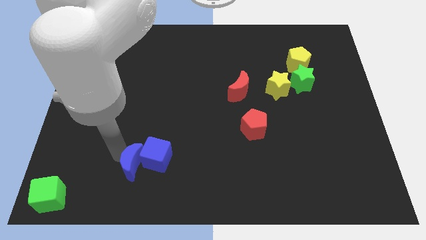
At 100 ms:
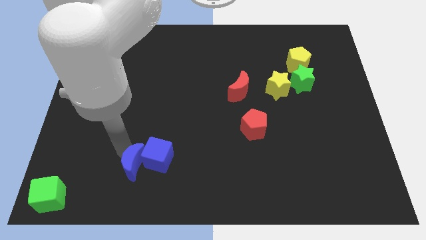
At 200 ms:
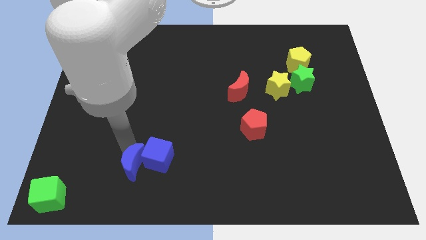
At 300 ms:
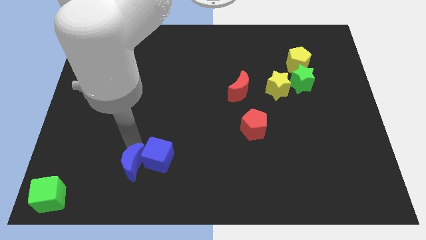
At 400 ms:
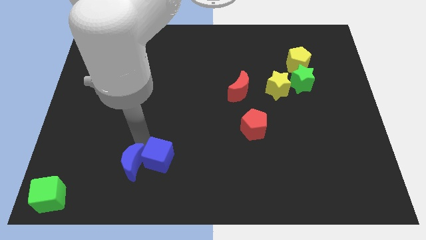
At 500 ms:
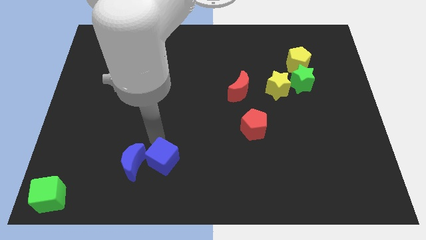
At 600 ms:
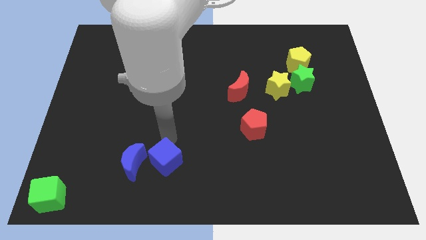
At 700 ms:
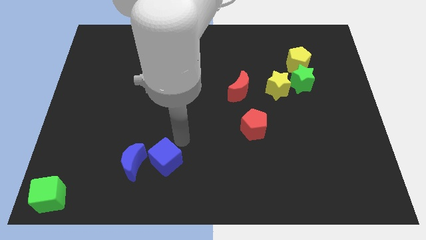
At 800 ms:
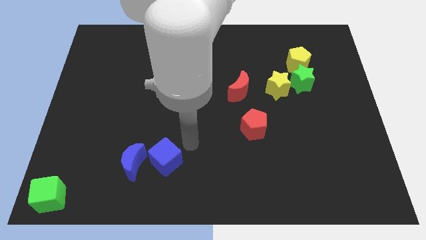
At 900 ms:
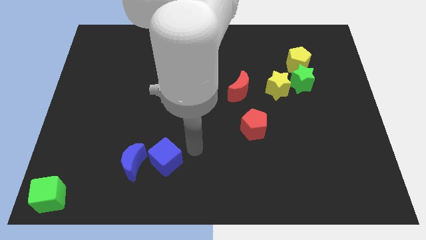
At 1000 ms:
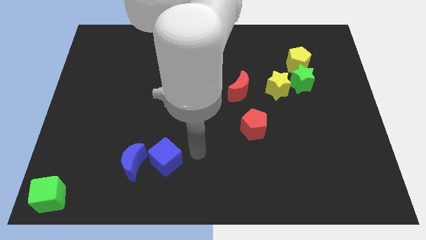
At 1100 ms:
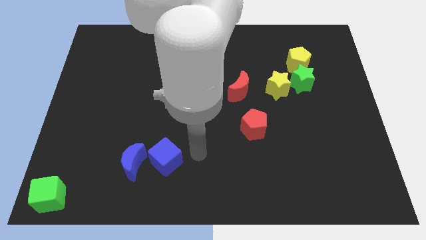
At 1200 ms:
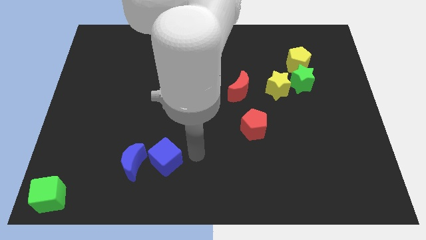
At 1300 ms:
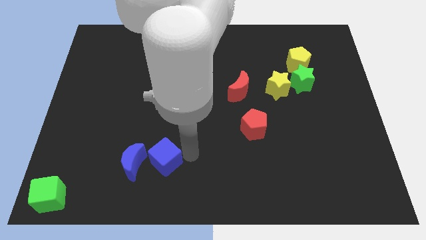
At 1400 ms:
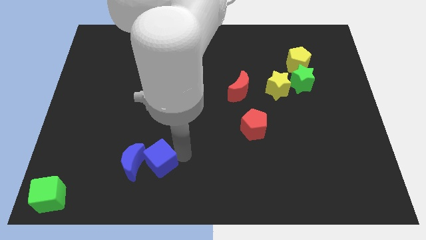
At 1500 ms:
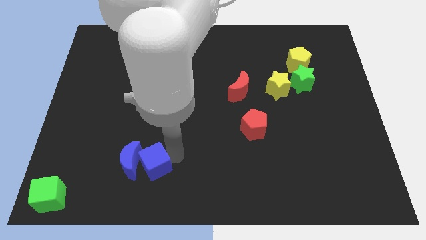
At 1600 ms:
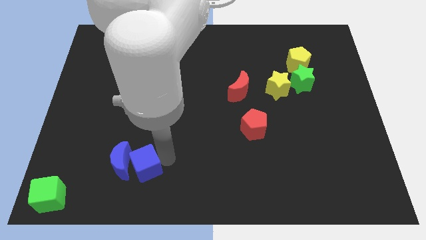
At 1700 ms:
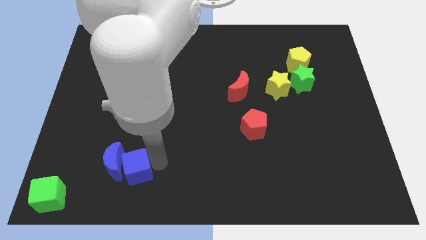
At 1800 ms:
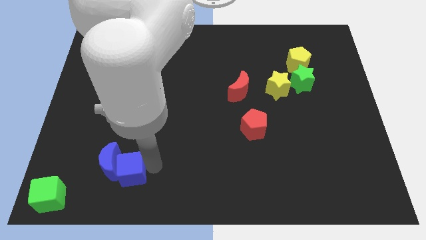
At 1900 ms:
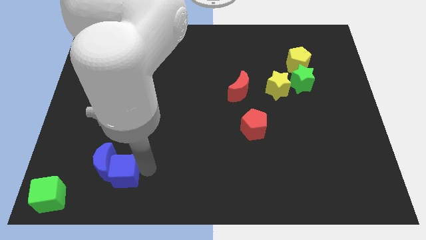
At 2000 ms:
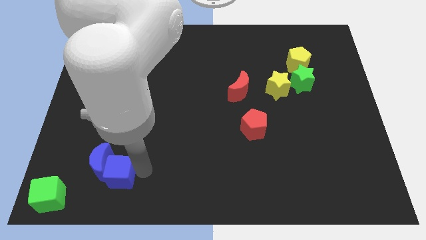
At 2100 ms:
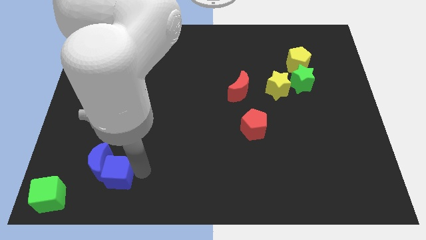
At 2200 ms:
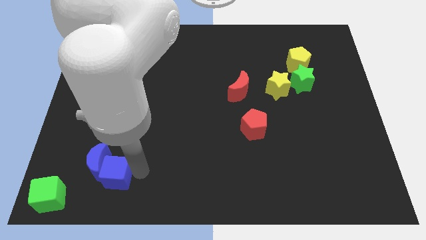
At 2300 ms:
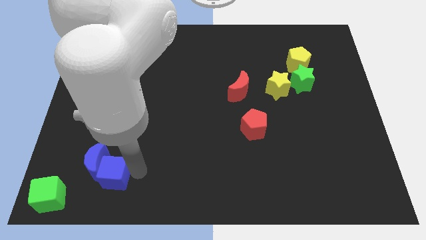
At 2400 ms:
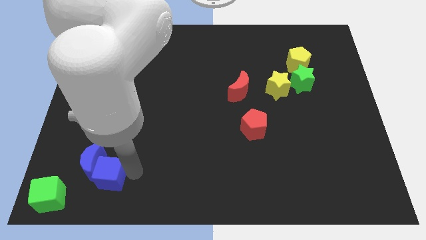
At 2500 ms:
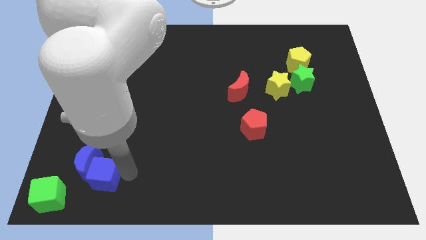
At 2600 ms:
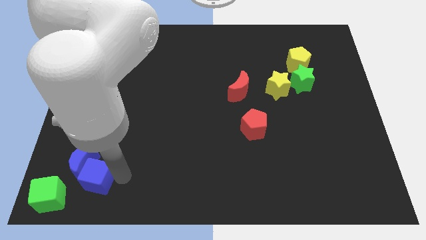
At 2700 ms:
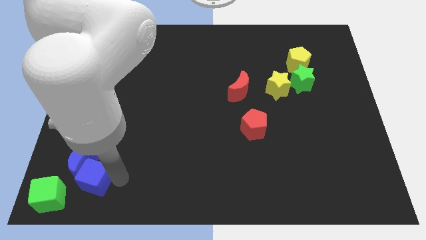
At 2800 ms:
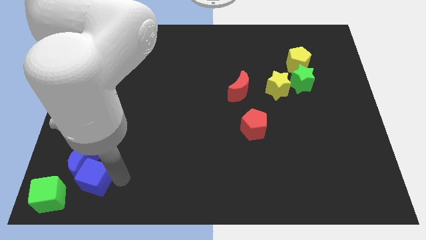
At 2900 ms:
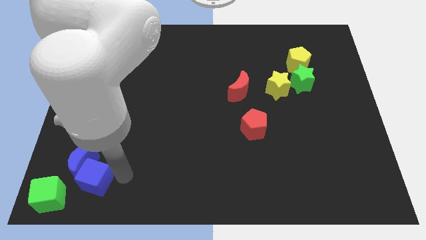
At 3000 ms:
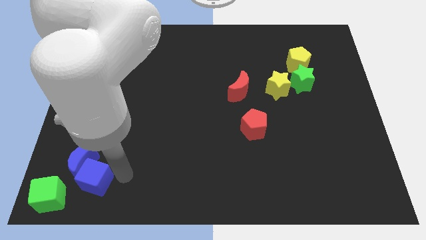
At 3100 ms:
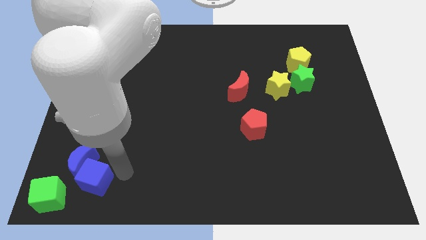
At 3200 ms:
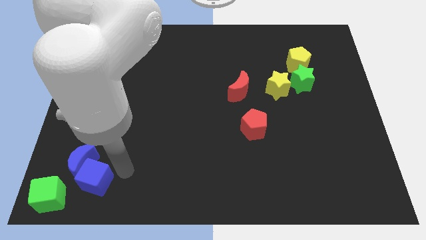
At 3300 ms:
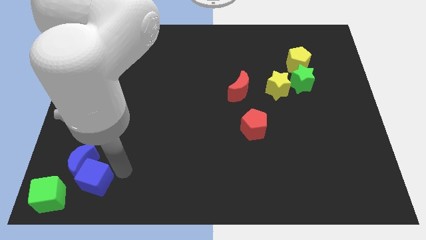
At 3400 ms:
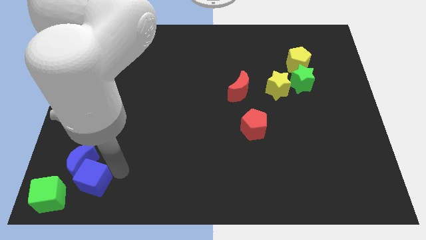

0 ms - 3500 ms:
move the blue blocks towards the green cube

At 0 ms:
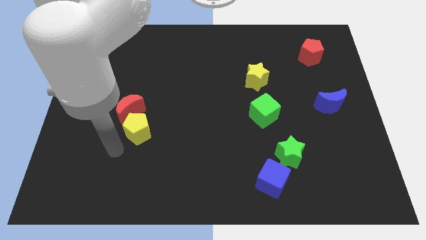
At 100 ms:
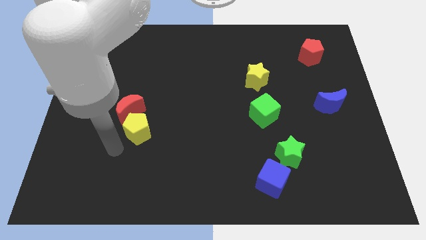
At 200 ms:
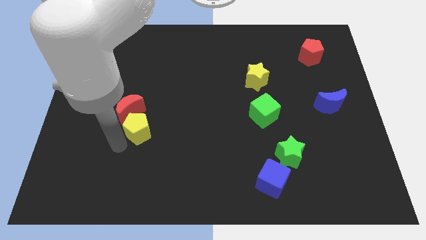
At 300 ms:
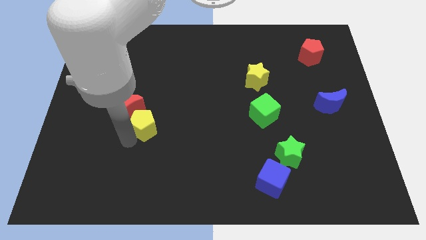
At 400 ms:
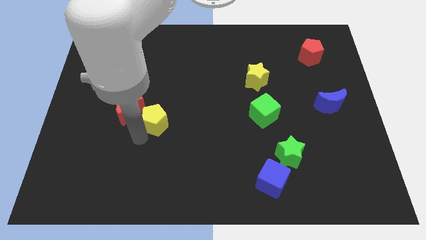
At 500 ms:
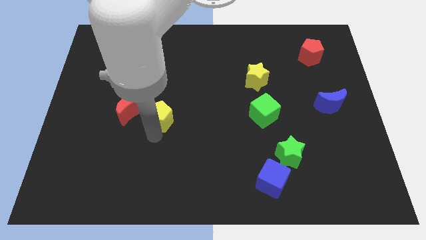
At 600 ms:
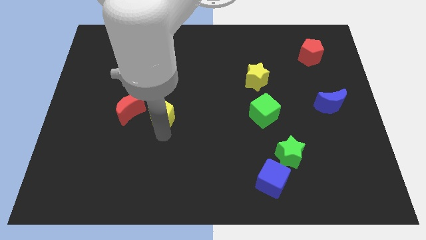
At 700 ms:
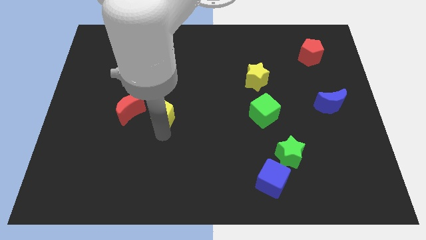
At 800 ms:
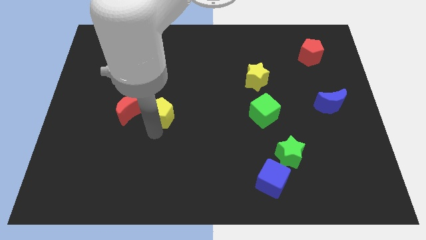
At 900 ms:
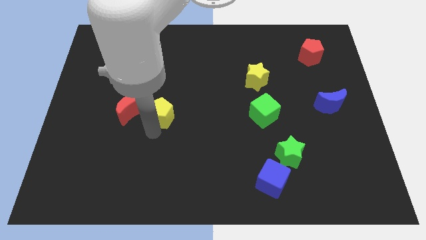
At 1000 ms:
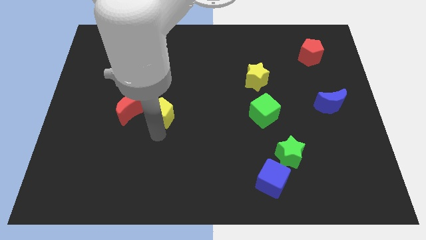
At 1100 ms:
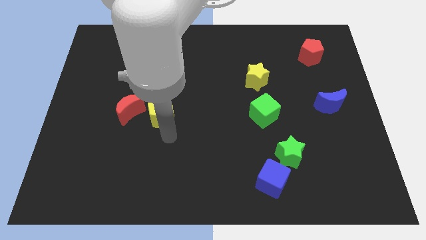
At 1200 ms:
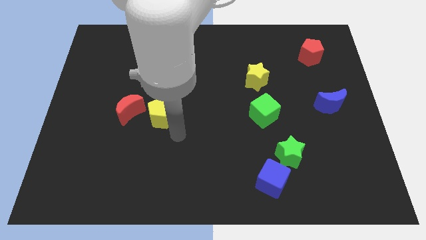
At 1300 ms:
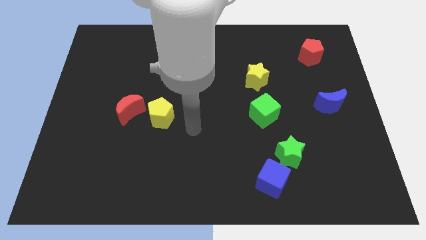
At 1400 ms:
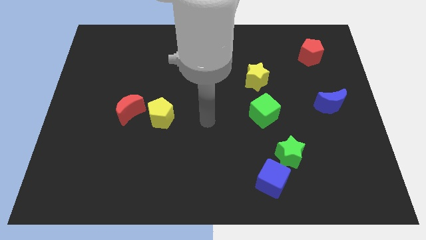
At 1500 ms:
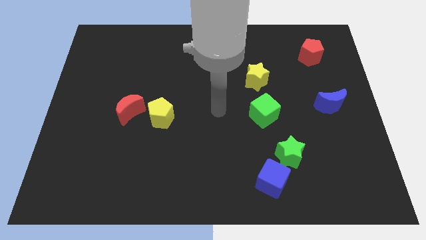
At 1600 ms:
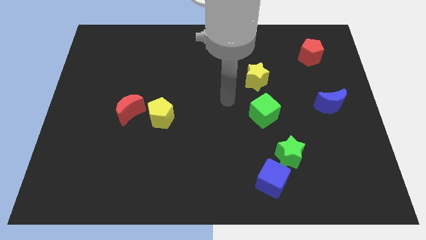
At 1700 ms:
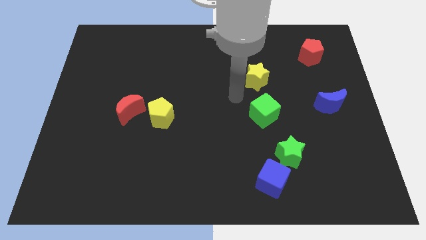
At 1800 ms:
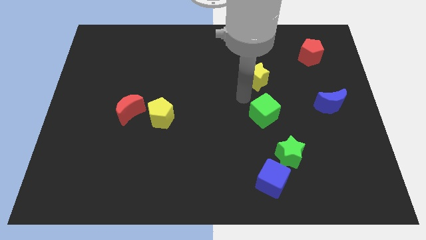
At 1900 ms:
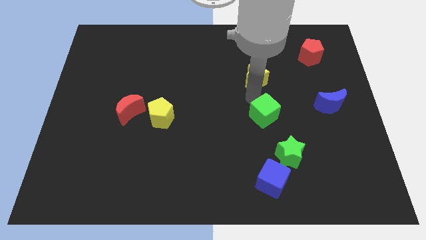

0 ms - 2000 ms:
push the yellow pentagon towards the right of the red crescent

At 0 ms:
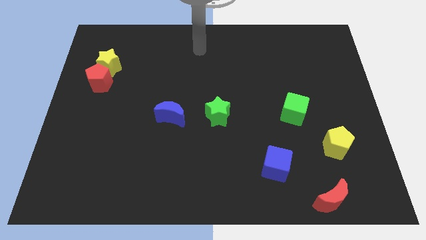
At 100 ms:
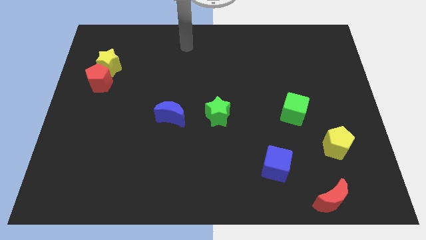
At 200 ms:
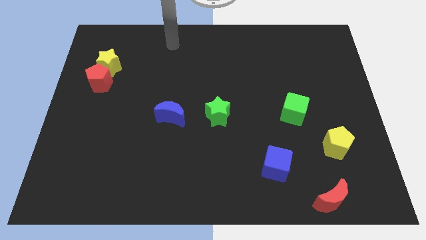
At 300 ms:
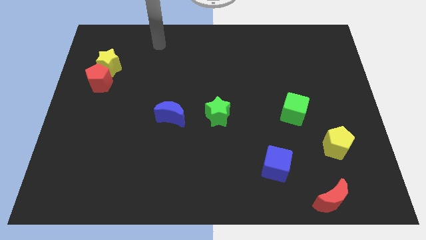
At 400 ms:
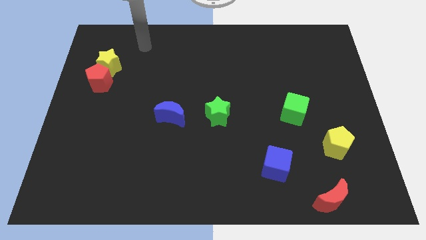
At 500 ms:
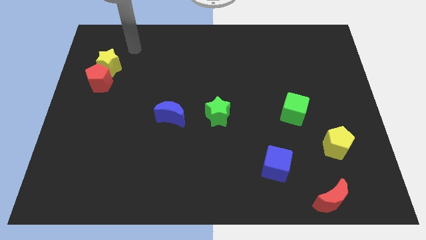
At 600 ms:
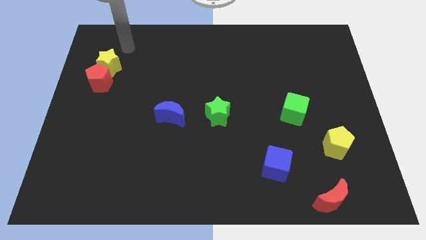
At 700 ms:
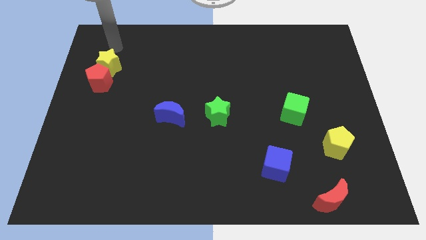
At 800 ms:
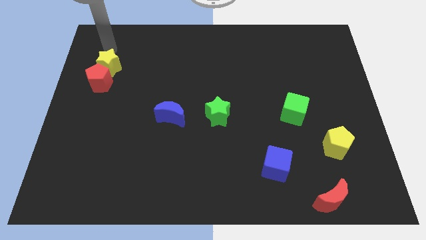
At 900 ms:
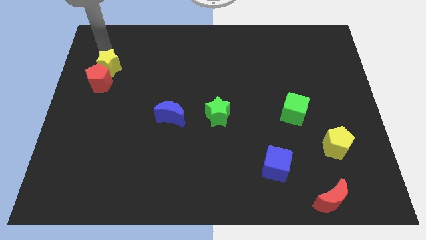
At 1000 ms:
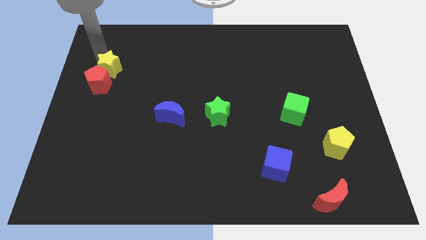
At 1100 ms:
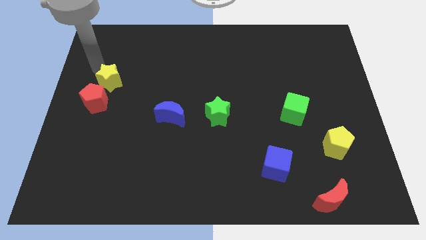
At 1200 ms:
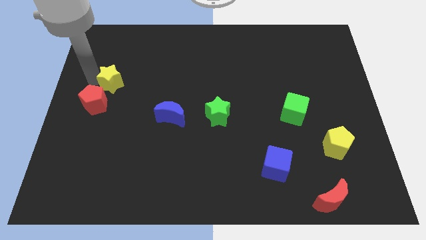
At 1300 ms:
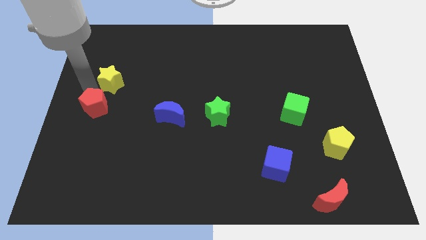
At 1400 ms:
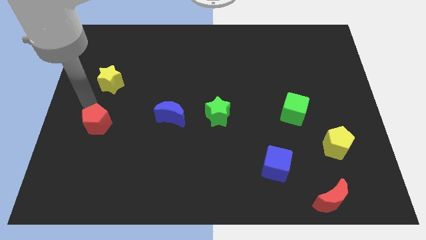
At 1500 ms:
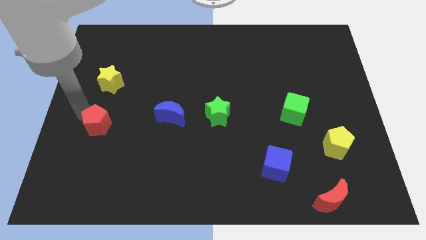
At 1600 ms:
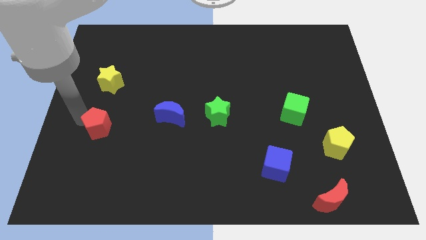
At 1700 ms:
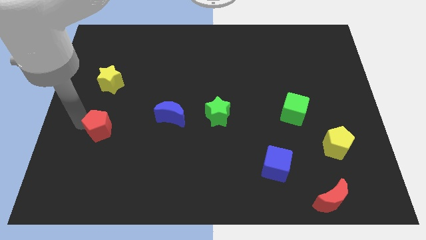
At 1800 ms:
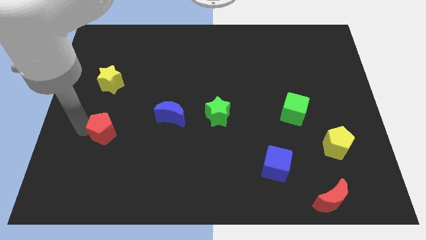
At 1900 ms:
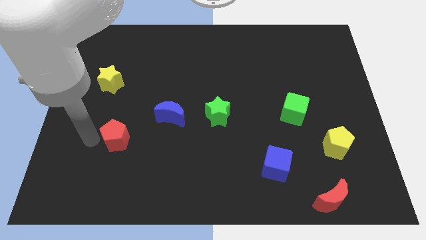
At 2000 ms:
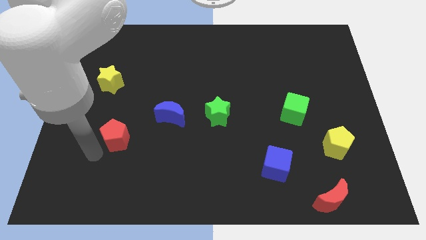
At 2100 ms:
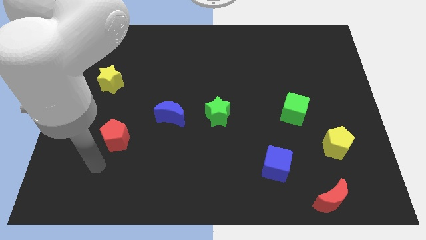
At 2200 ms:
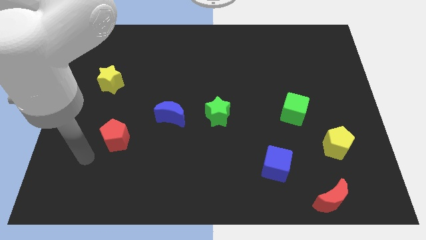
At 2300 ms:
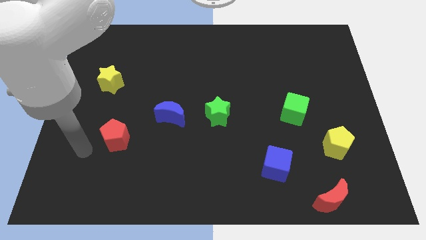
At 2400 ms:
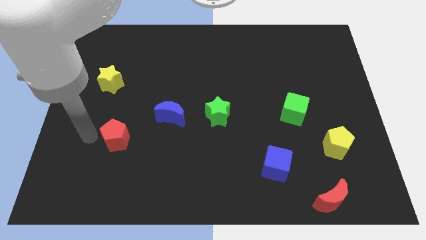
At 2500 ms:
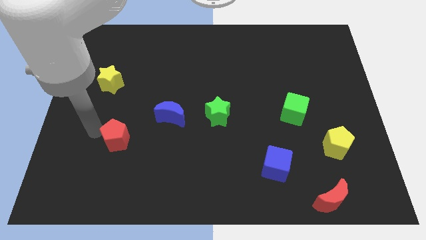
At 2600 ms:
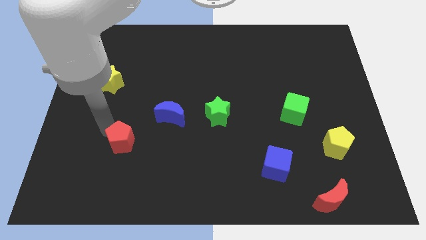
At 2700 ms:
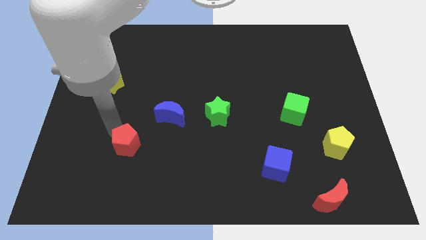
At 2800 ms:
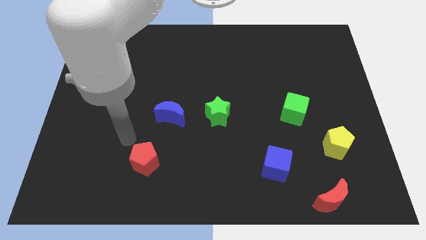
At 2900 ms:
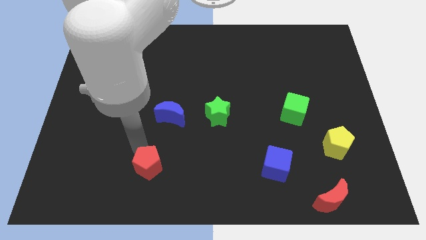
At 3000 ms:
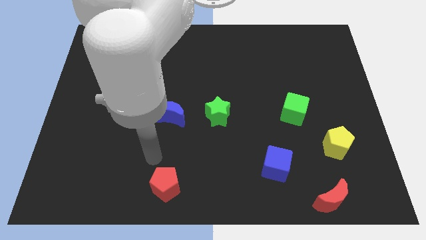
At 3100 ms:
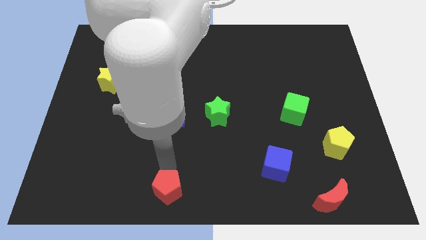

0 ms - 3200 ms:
place red pentagon parallel to the bottom of the blue moon

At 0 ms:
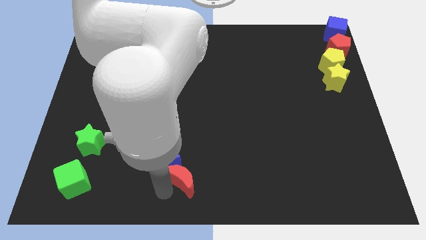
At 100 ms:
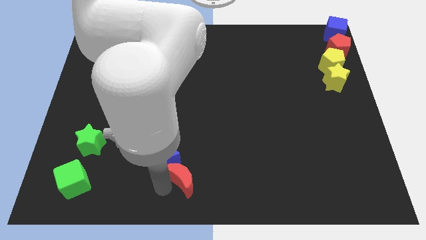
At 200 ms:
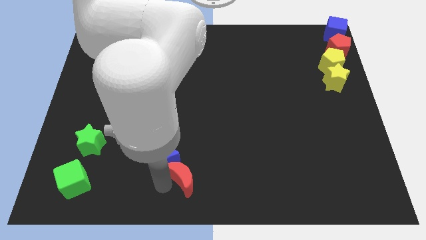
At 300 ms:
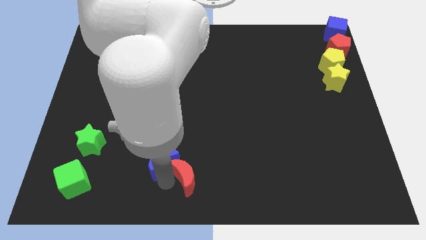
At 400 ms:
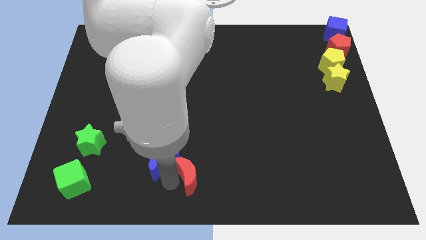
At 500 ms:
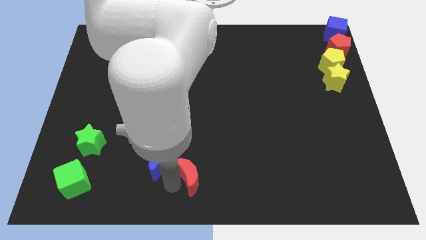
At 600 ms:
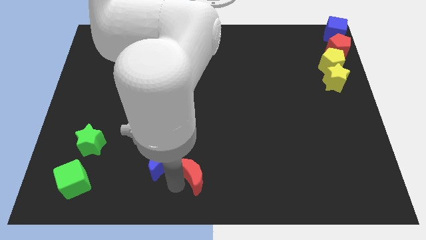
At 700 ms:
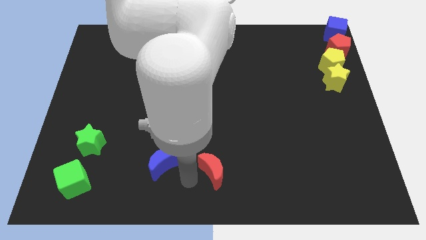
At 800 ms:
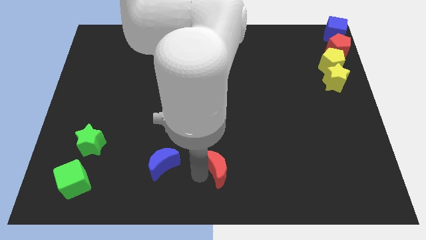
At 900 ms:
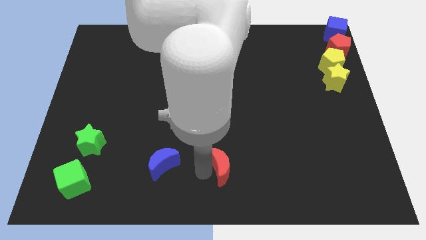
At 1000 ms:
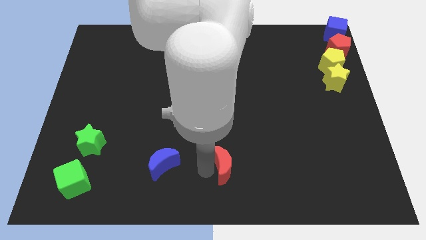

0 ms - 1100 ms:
separate red moon from blue moon
